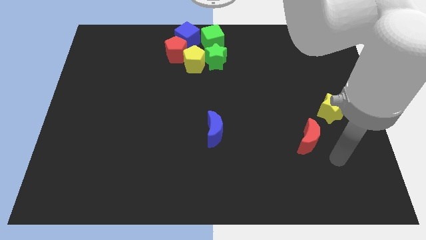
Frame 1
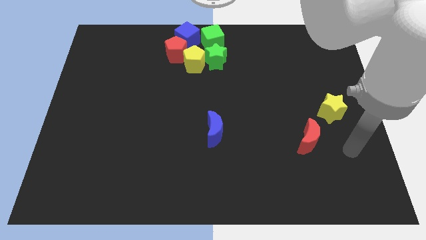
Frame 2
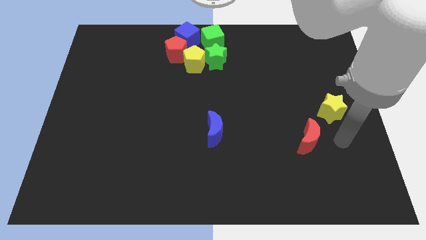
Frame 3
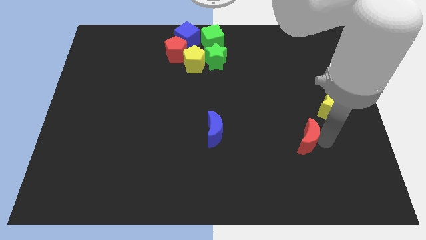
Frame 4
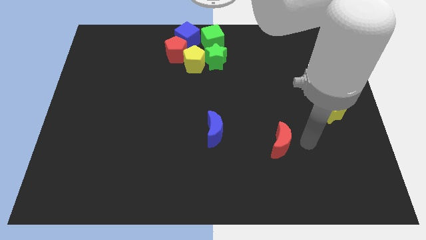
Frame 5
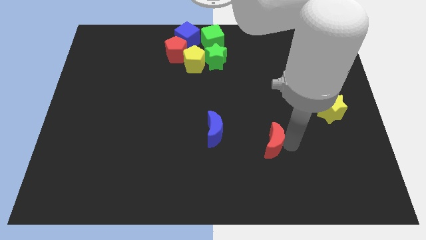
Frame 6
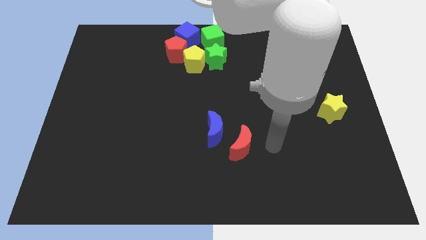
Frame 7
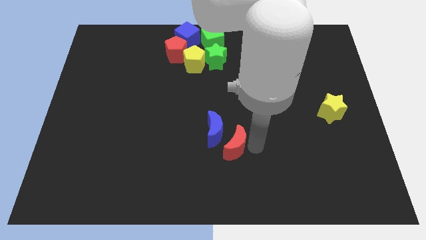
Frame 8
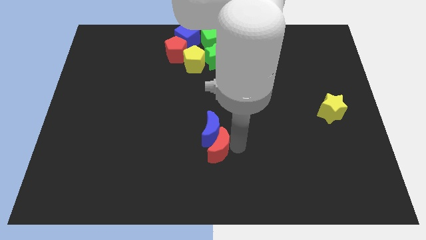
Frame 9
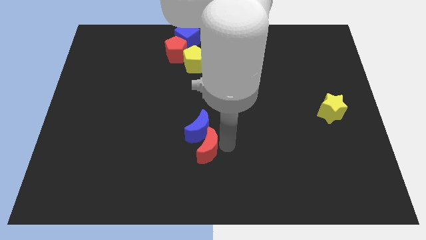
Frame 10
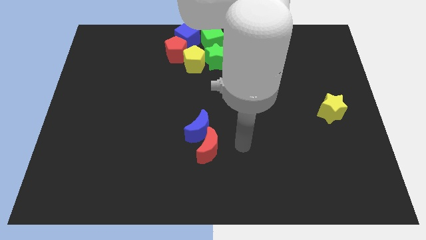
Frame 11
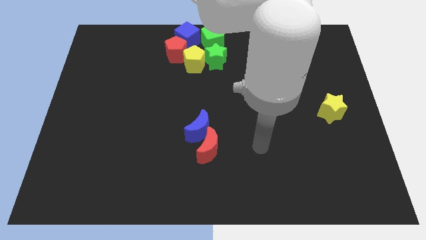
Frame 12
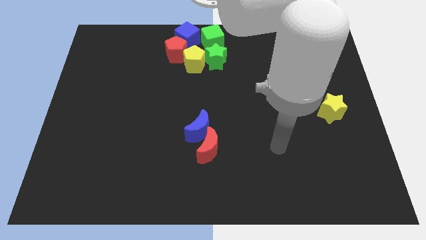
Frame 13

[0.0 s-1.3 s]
move the red crescent towards the blue crescent

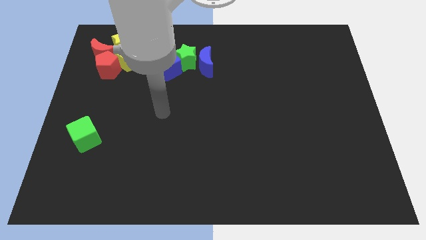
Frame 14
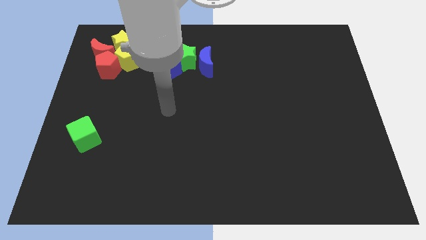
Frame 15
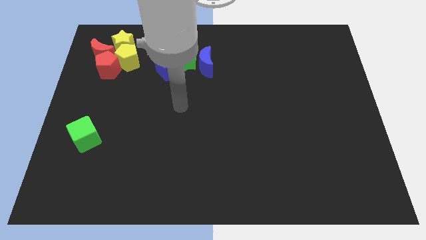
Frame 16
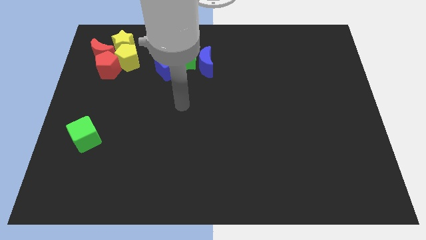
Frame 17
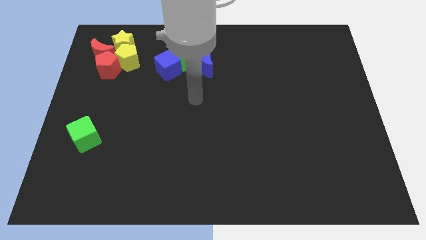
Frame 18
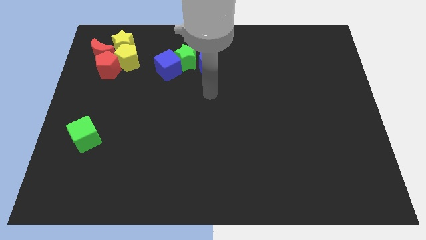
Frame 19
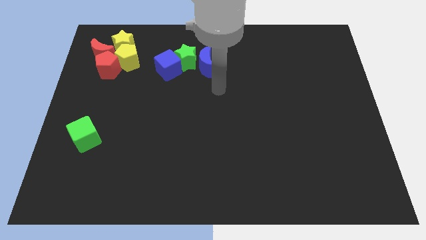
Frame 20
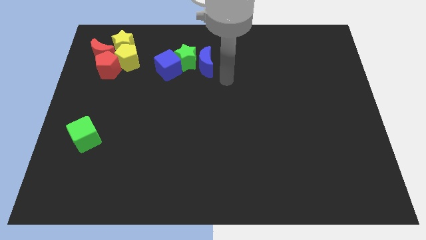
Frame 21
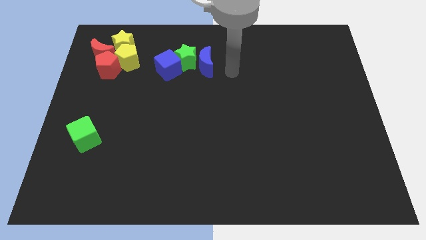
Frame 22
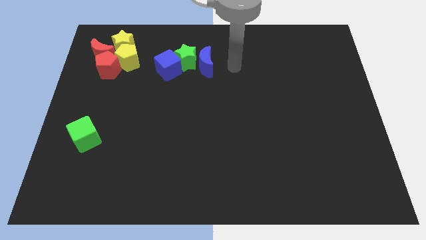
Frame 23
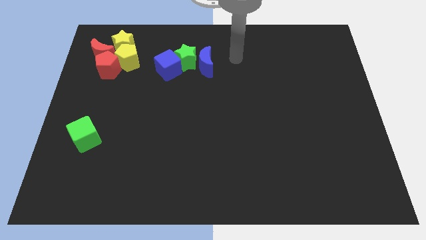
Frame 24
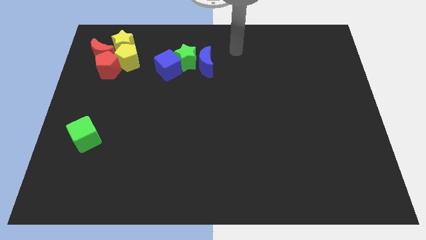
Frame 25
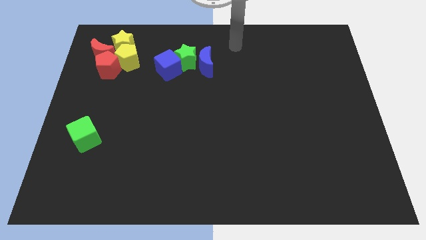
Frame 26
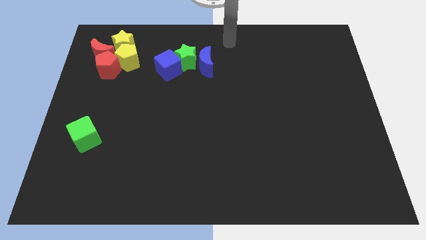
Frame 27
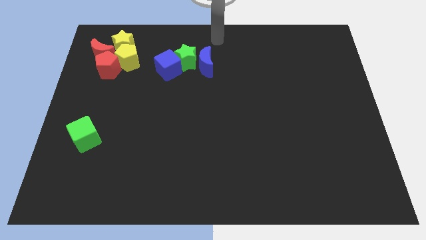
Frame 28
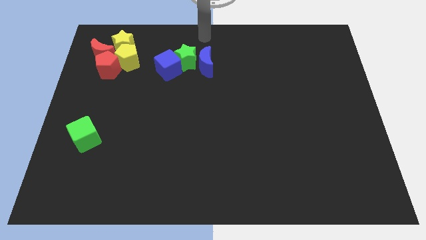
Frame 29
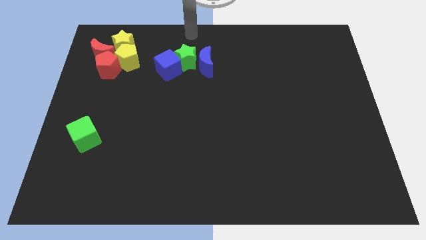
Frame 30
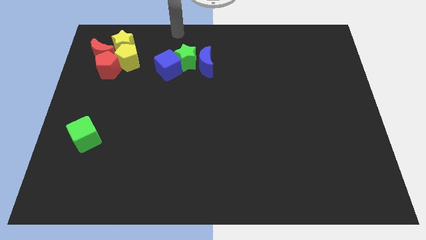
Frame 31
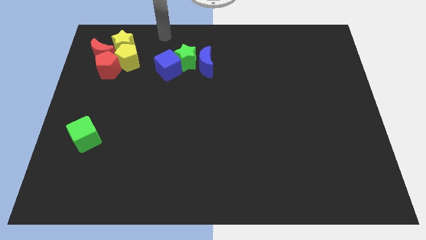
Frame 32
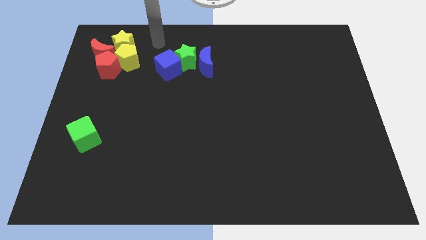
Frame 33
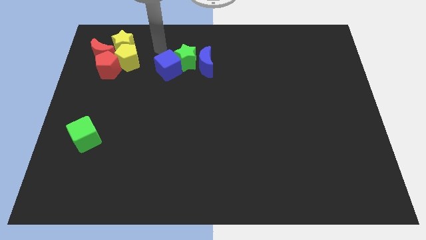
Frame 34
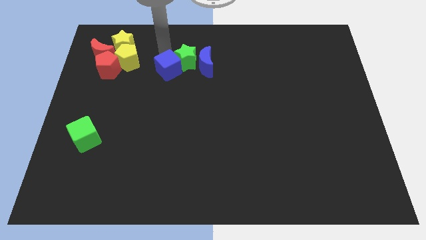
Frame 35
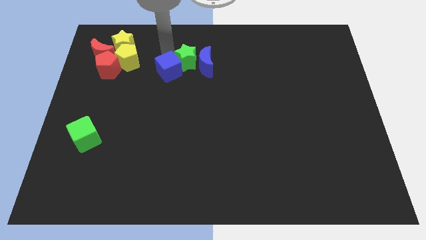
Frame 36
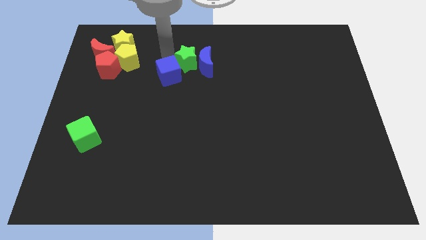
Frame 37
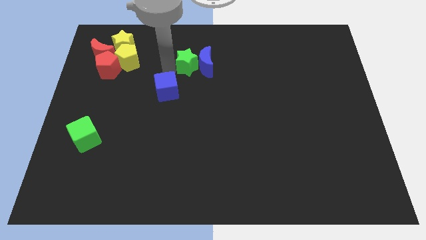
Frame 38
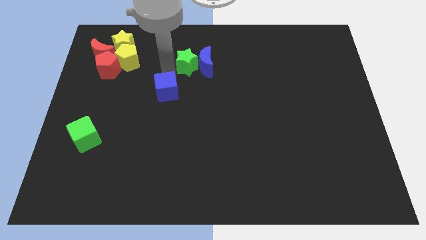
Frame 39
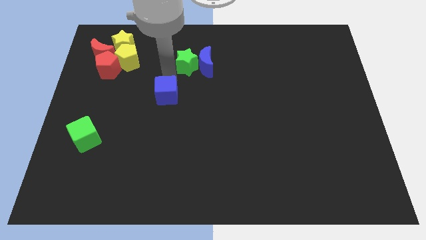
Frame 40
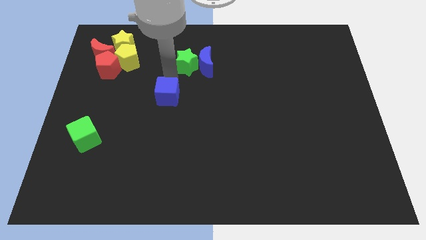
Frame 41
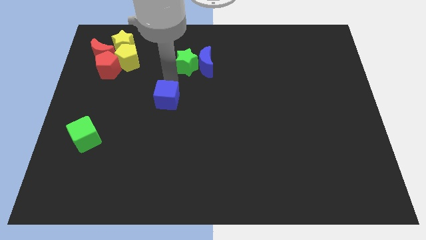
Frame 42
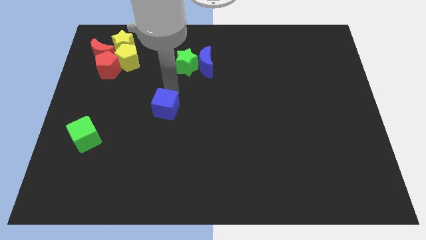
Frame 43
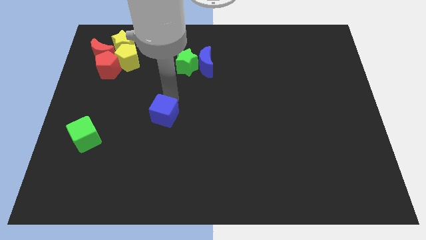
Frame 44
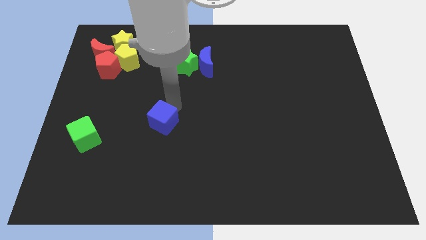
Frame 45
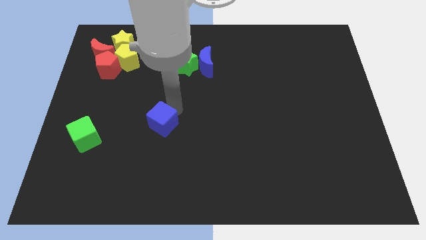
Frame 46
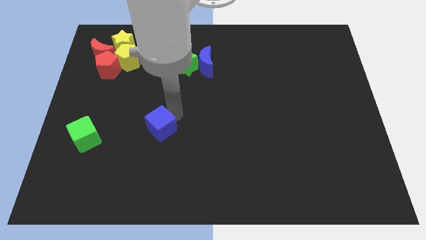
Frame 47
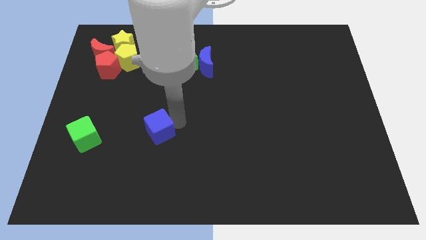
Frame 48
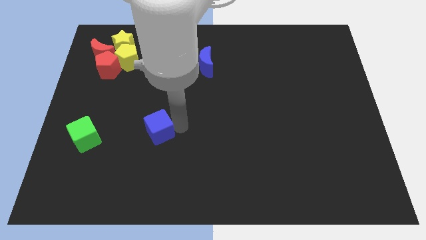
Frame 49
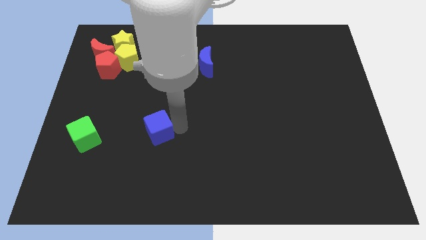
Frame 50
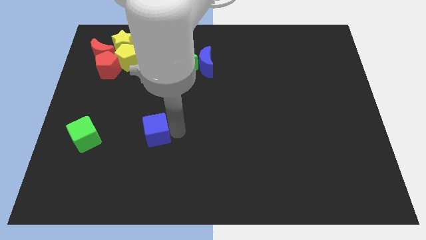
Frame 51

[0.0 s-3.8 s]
push the blue cube to the right of the green cube

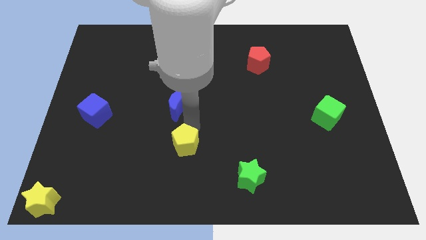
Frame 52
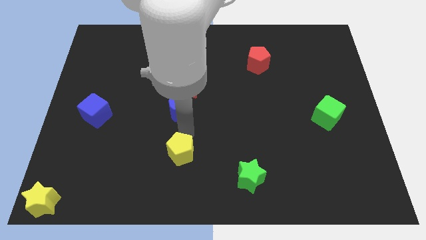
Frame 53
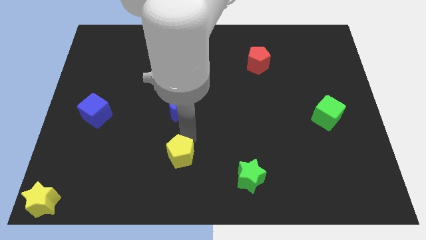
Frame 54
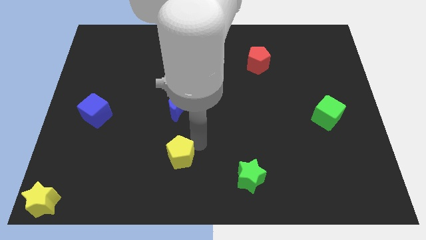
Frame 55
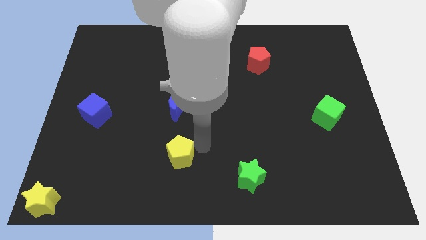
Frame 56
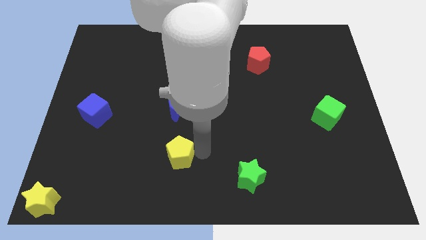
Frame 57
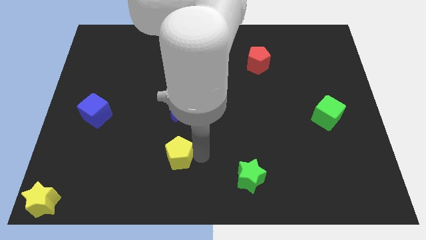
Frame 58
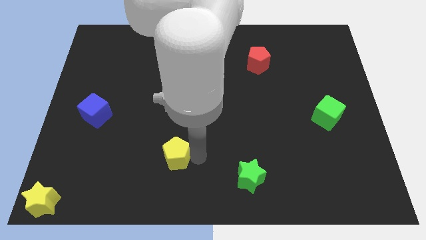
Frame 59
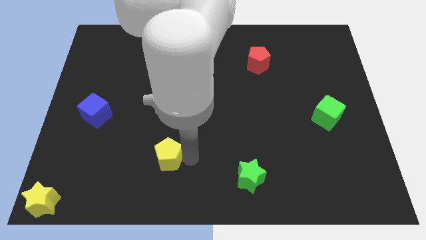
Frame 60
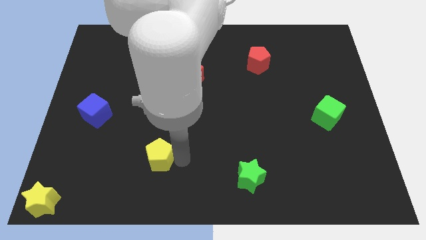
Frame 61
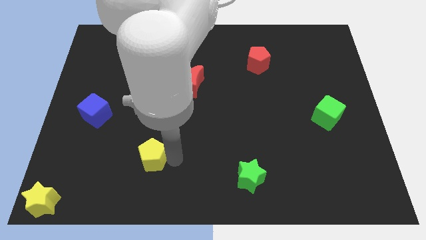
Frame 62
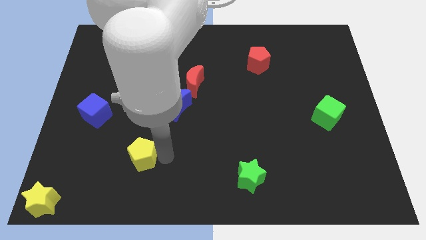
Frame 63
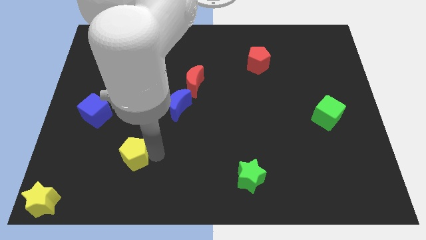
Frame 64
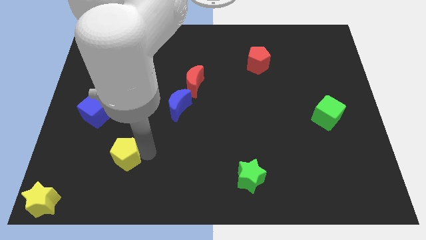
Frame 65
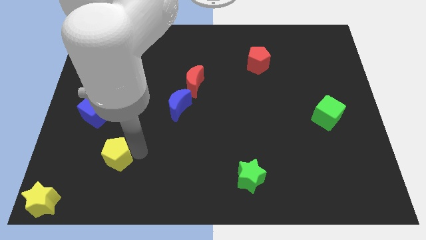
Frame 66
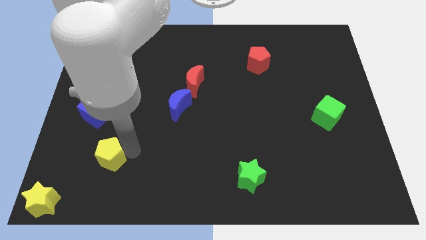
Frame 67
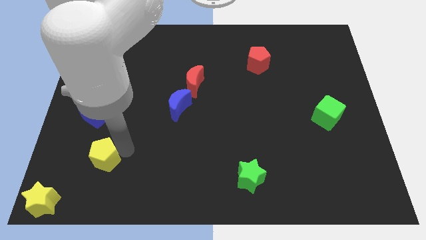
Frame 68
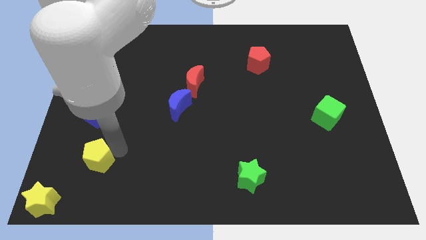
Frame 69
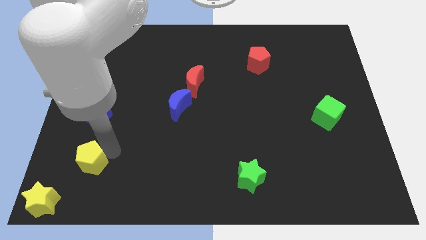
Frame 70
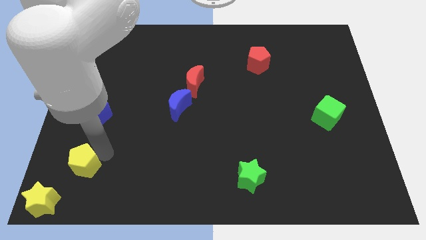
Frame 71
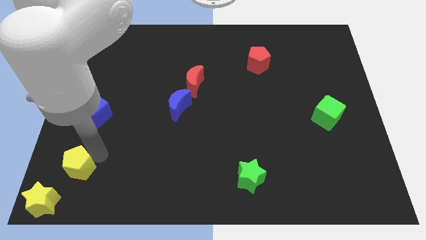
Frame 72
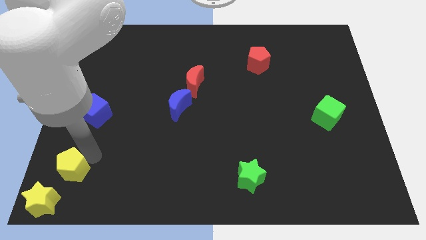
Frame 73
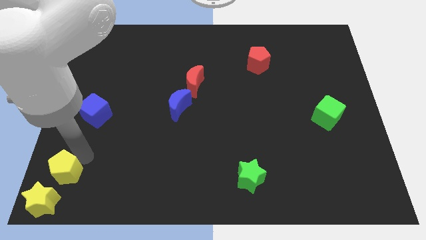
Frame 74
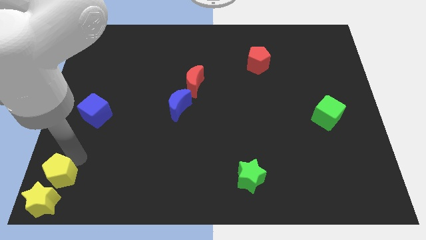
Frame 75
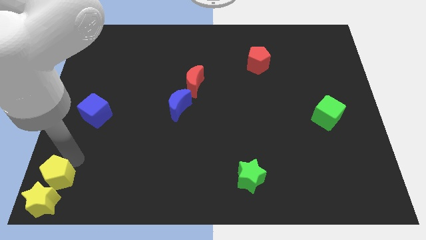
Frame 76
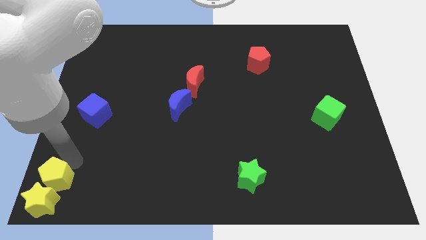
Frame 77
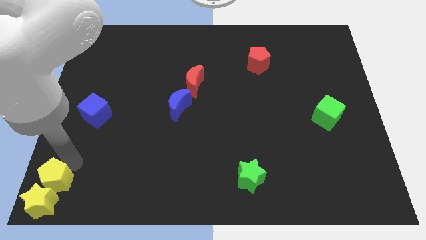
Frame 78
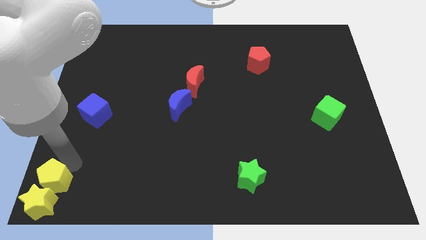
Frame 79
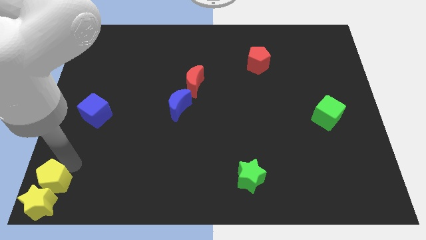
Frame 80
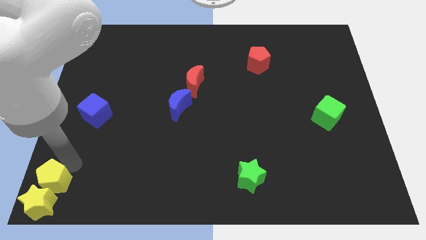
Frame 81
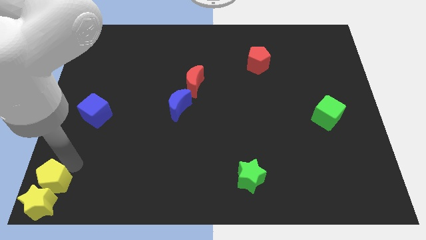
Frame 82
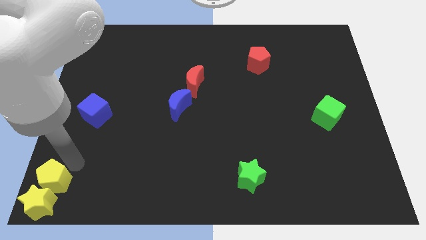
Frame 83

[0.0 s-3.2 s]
push the yellow pentagon into the yellow star

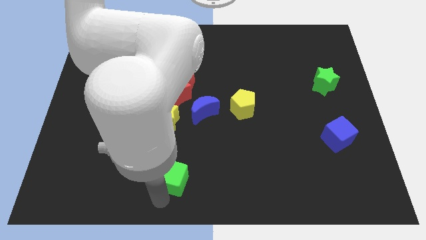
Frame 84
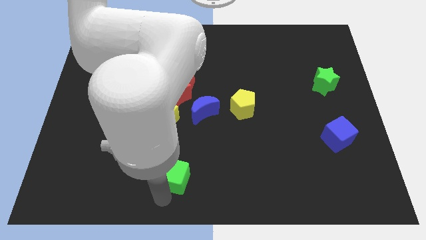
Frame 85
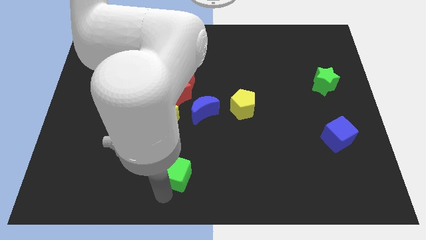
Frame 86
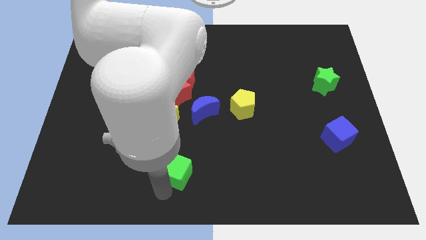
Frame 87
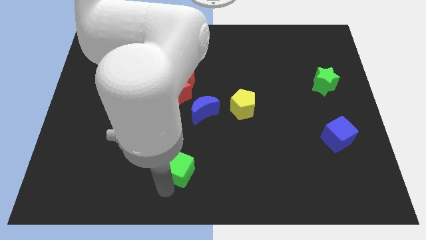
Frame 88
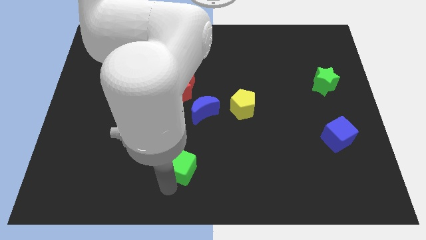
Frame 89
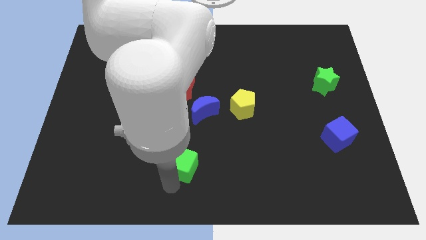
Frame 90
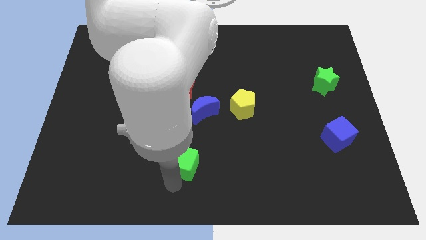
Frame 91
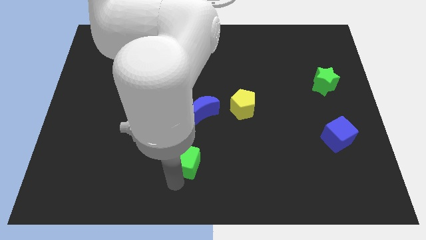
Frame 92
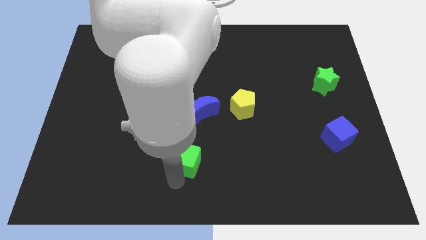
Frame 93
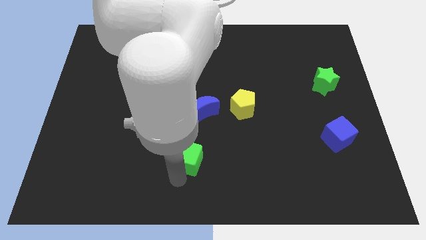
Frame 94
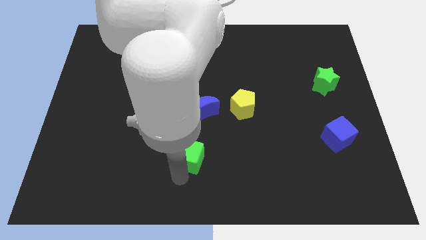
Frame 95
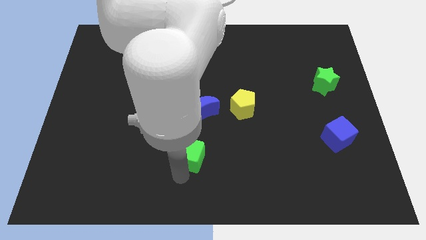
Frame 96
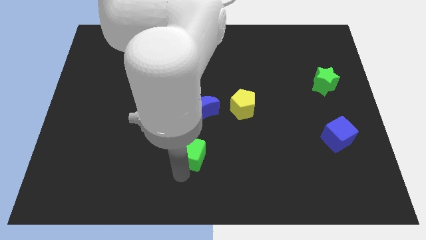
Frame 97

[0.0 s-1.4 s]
push the green cube towards the blue moon
